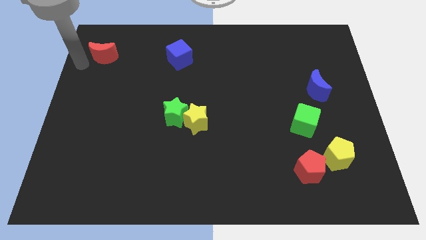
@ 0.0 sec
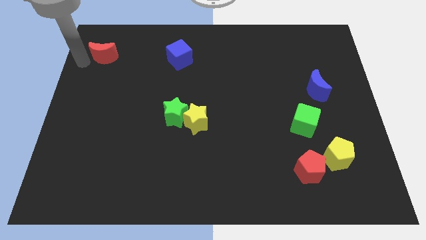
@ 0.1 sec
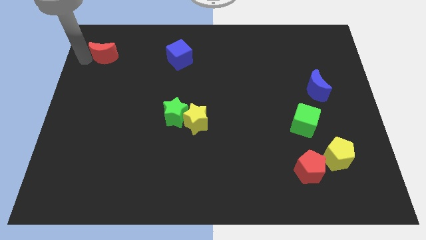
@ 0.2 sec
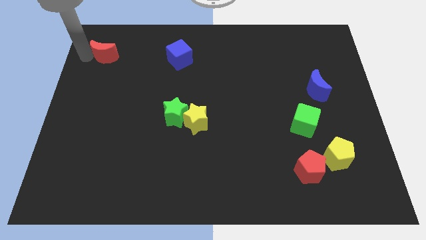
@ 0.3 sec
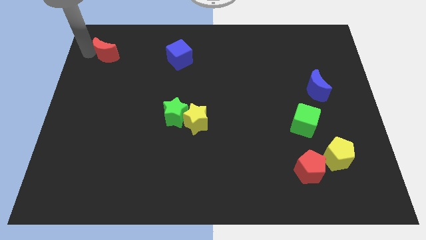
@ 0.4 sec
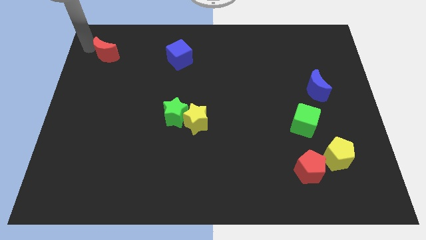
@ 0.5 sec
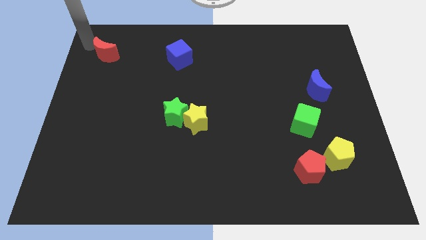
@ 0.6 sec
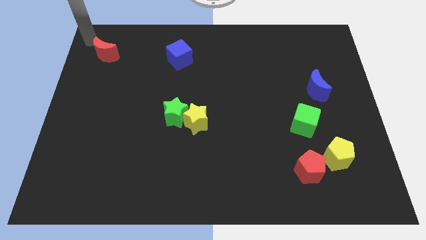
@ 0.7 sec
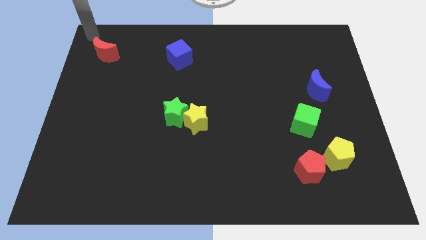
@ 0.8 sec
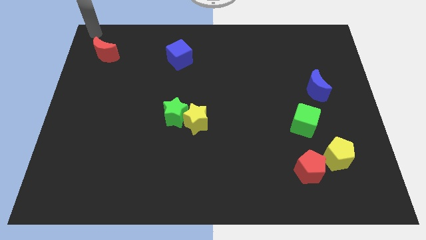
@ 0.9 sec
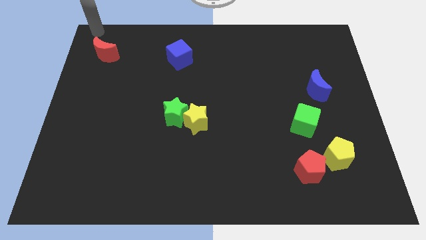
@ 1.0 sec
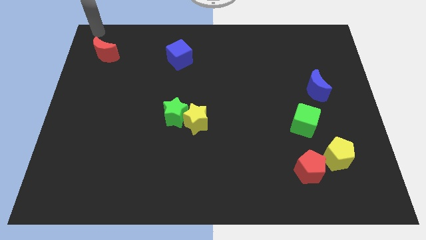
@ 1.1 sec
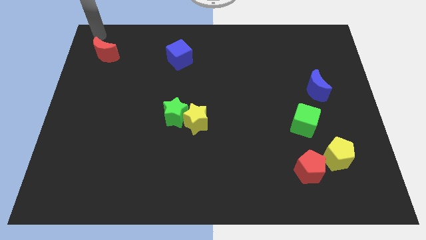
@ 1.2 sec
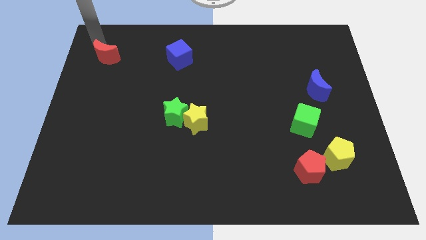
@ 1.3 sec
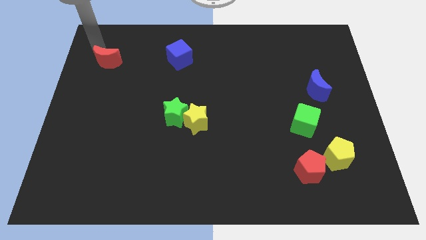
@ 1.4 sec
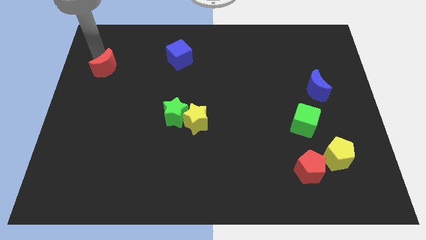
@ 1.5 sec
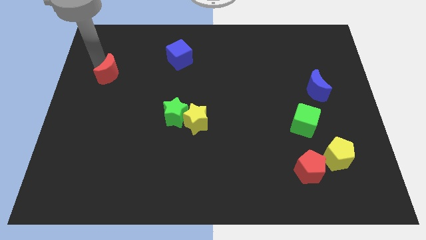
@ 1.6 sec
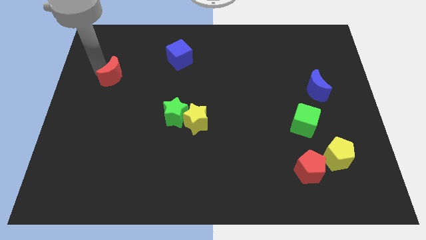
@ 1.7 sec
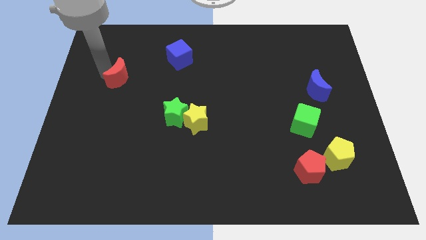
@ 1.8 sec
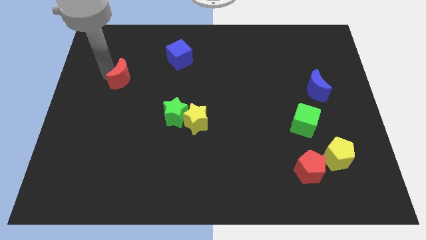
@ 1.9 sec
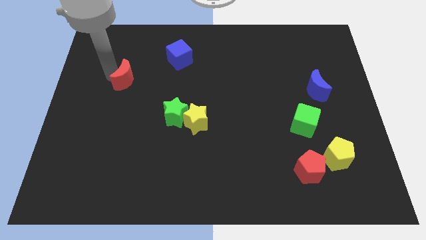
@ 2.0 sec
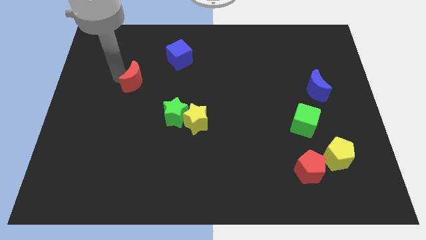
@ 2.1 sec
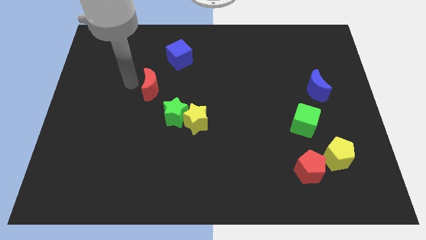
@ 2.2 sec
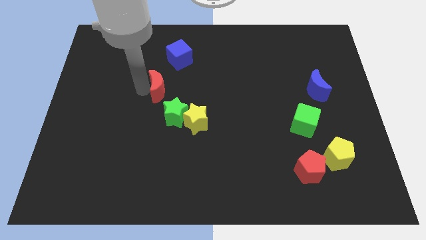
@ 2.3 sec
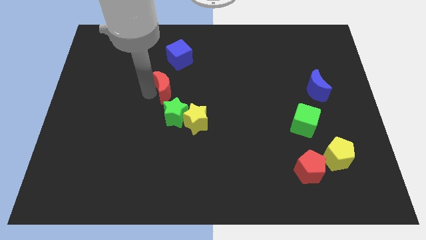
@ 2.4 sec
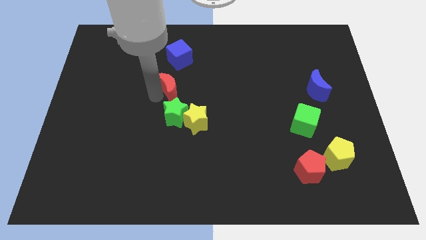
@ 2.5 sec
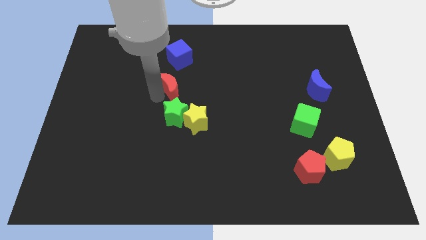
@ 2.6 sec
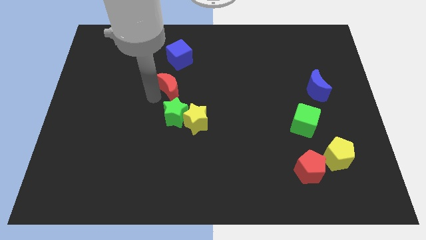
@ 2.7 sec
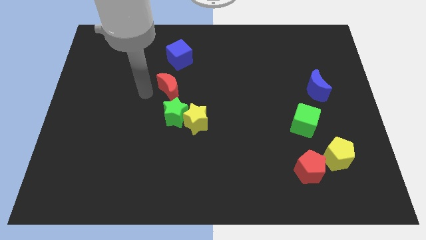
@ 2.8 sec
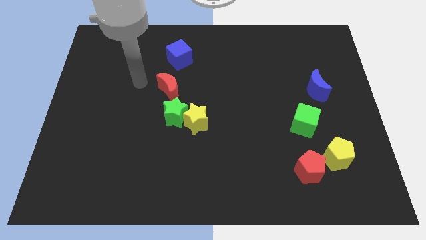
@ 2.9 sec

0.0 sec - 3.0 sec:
move the red crescent close to the green star

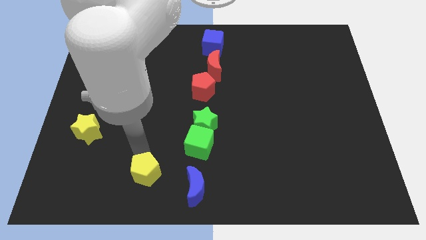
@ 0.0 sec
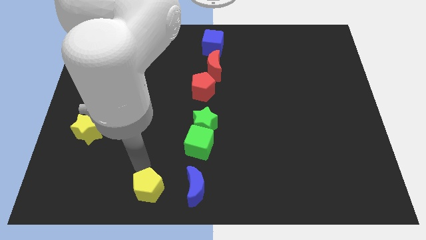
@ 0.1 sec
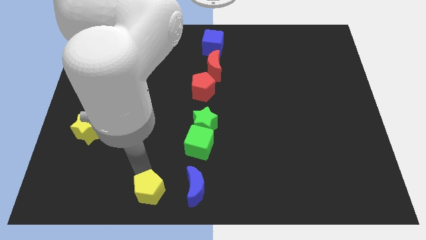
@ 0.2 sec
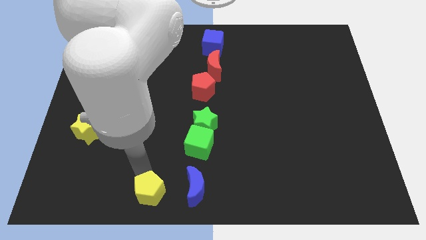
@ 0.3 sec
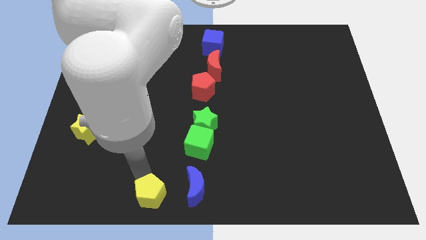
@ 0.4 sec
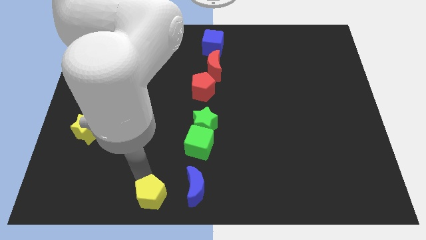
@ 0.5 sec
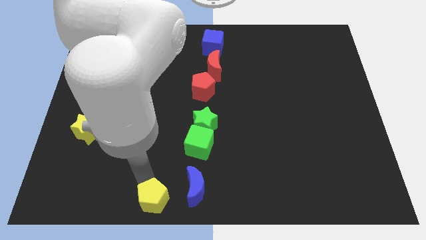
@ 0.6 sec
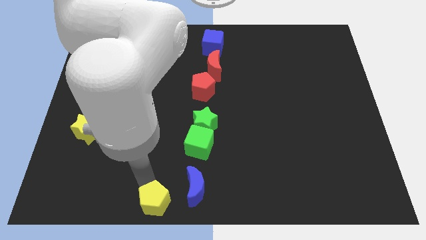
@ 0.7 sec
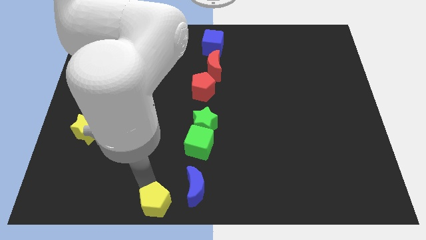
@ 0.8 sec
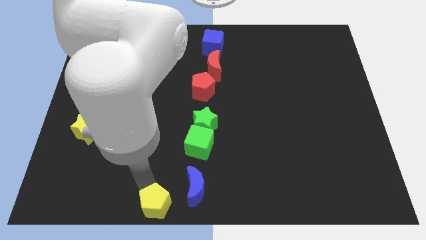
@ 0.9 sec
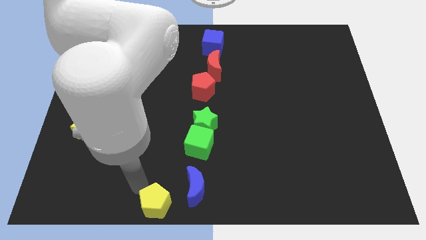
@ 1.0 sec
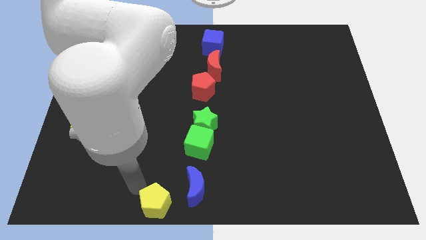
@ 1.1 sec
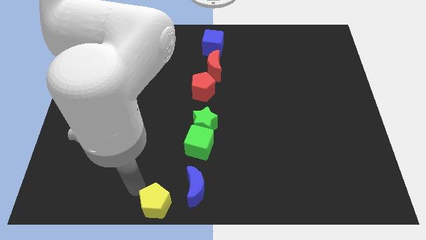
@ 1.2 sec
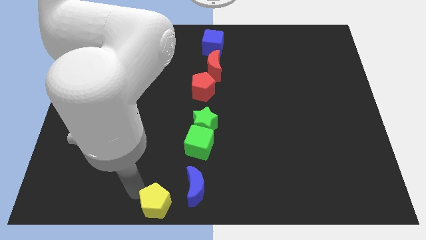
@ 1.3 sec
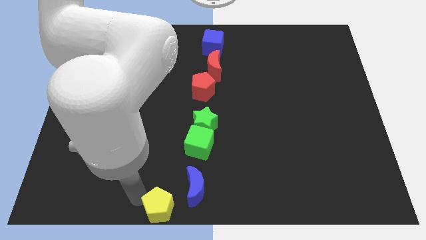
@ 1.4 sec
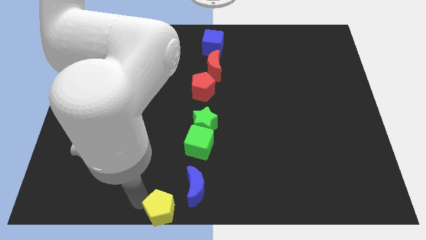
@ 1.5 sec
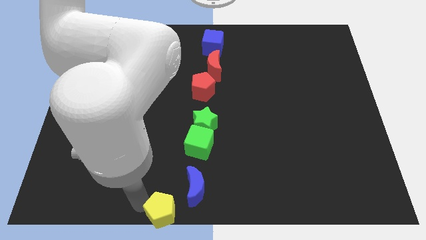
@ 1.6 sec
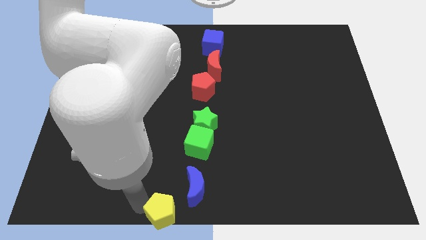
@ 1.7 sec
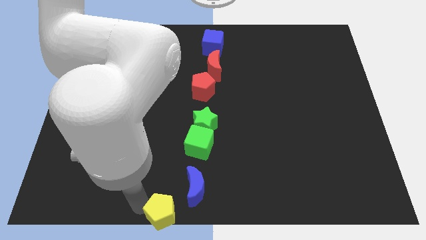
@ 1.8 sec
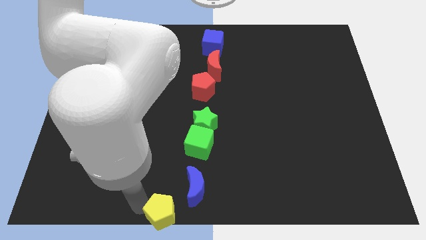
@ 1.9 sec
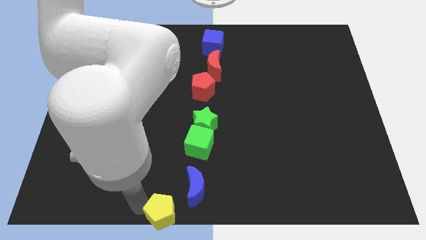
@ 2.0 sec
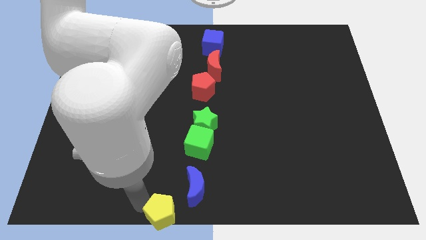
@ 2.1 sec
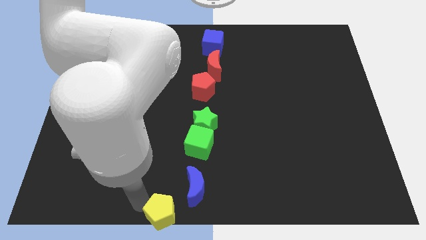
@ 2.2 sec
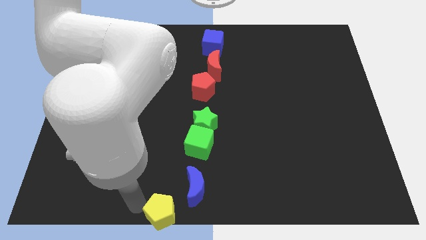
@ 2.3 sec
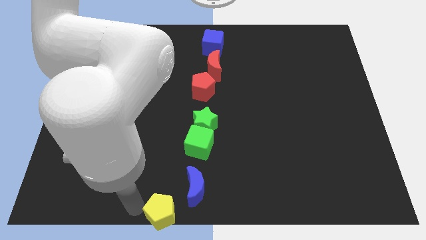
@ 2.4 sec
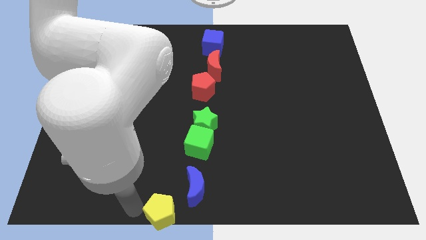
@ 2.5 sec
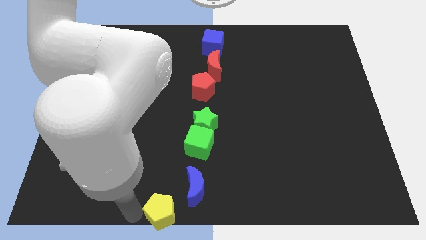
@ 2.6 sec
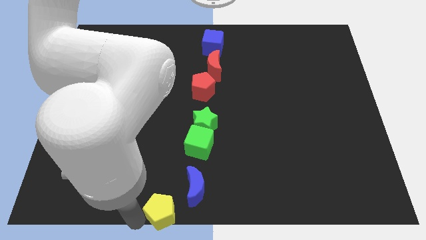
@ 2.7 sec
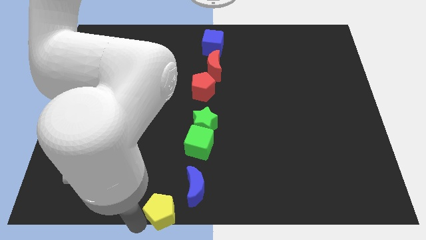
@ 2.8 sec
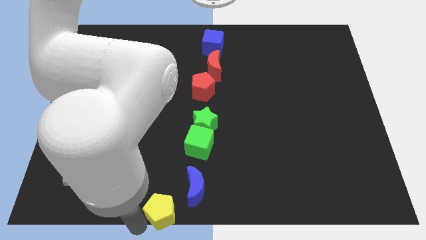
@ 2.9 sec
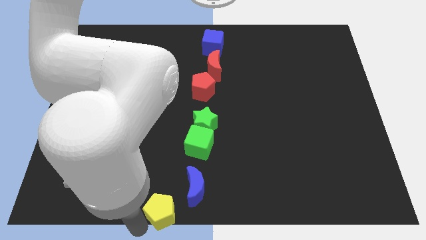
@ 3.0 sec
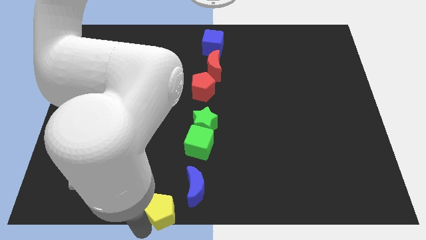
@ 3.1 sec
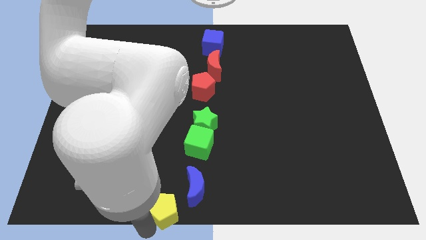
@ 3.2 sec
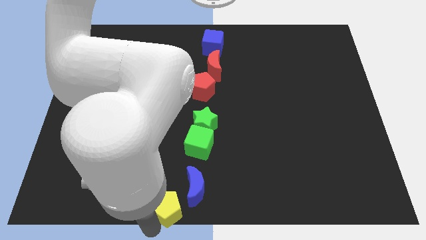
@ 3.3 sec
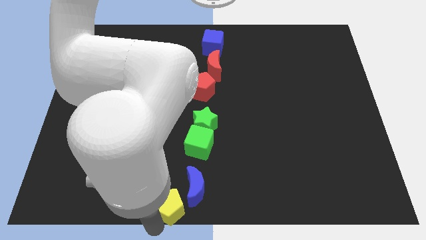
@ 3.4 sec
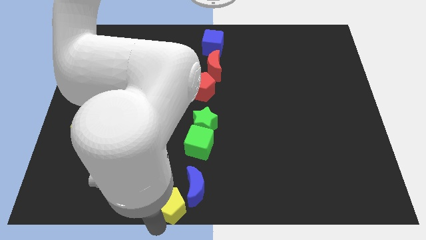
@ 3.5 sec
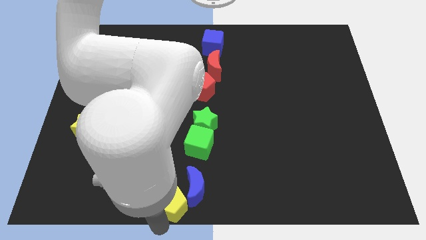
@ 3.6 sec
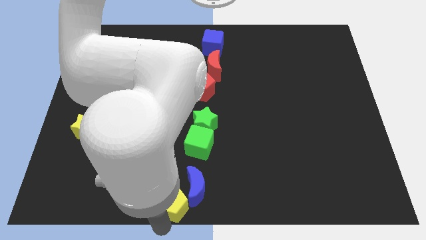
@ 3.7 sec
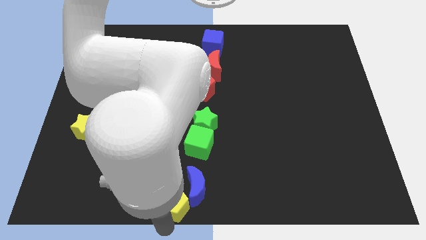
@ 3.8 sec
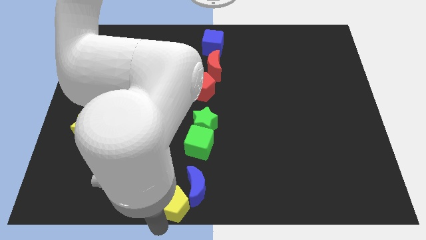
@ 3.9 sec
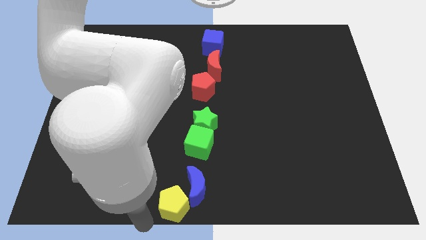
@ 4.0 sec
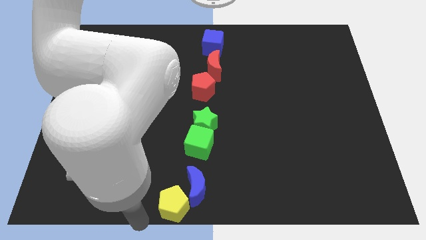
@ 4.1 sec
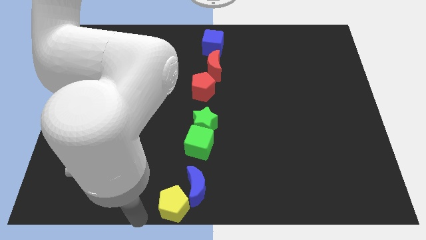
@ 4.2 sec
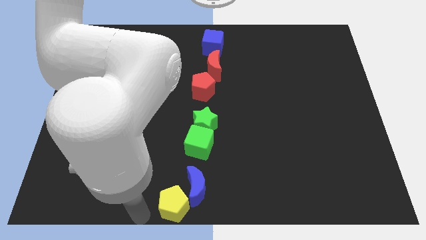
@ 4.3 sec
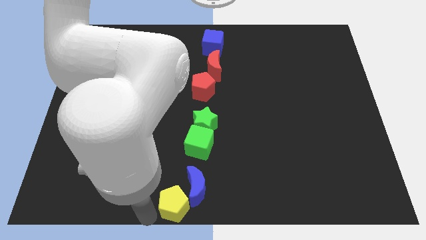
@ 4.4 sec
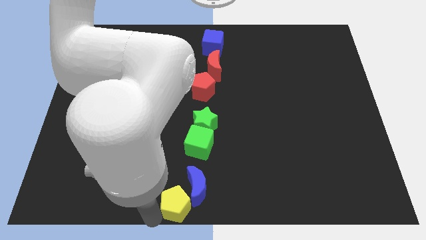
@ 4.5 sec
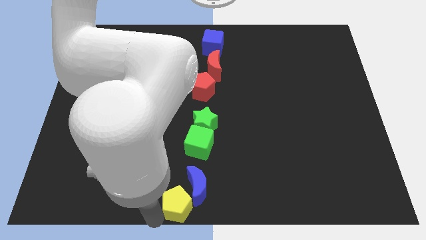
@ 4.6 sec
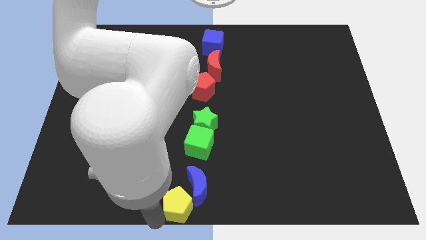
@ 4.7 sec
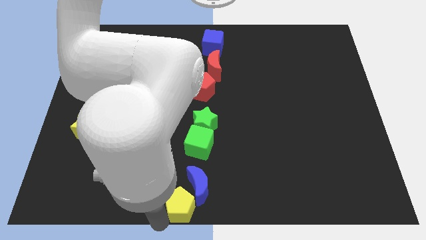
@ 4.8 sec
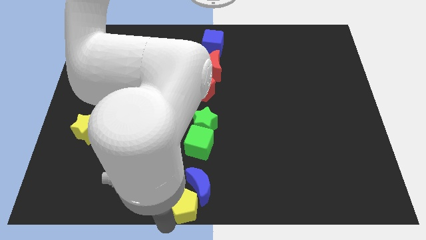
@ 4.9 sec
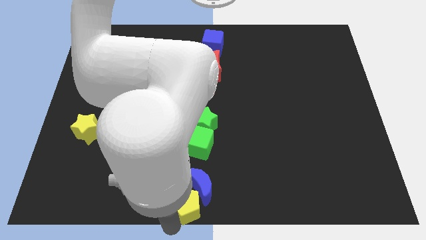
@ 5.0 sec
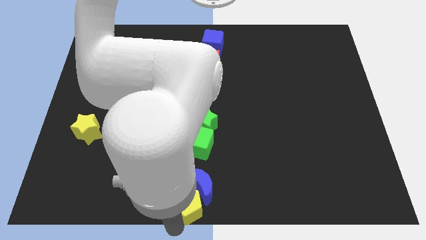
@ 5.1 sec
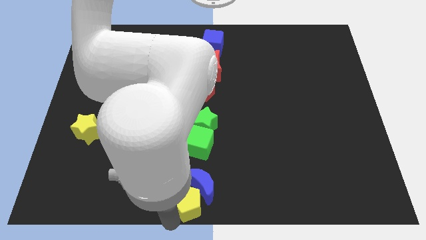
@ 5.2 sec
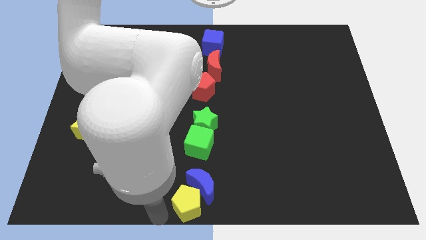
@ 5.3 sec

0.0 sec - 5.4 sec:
place the yellow pentagon below the blue crescent

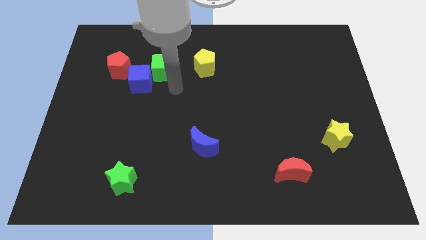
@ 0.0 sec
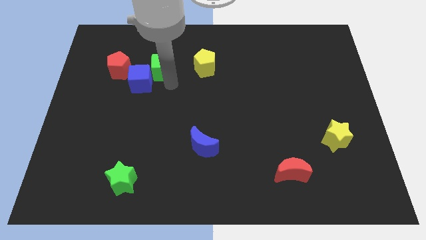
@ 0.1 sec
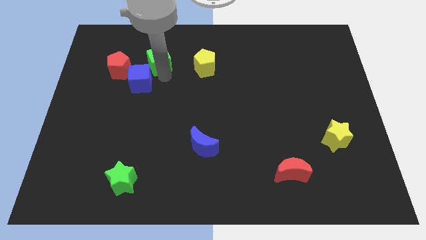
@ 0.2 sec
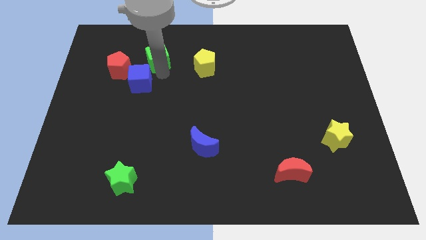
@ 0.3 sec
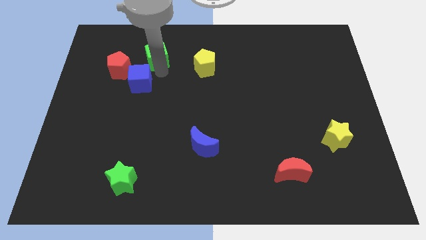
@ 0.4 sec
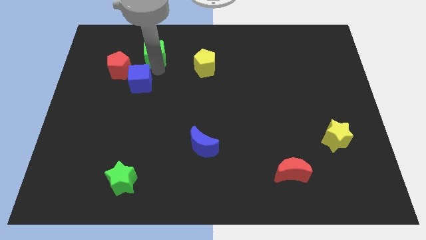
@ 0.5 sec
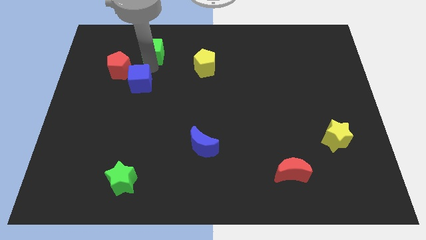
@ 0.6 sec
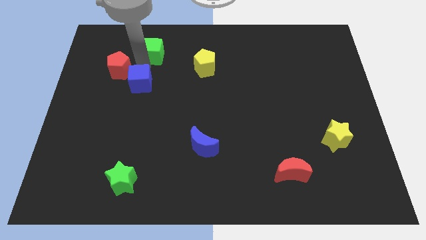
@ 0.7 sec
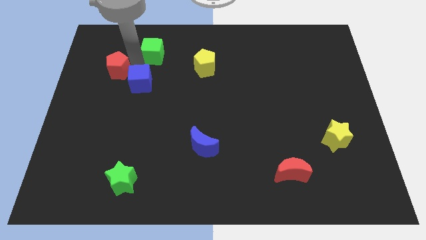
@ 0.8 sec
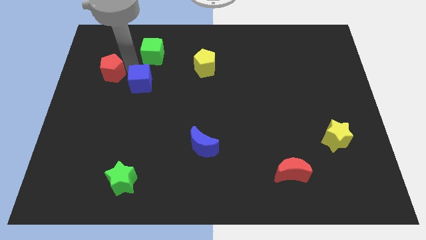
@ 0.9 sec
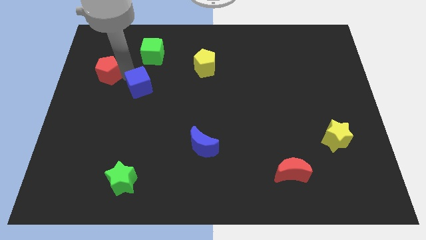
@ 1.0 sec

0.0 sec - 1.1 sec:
separate green cube from blue cube
